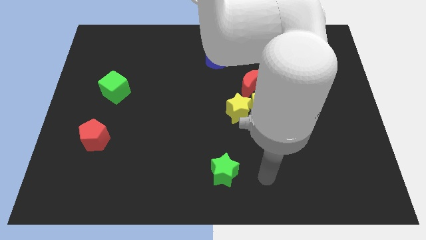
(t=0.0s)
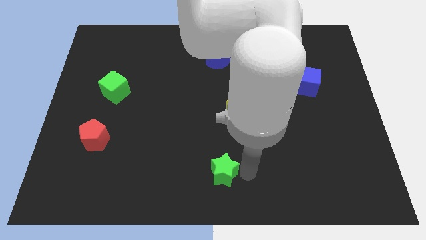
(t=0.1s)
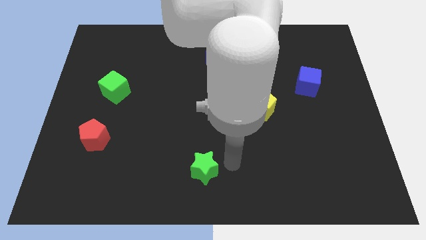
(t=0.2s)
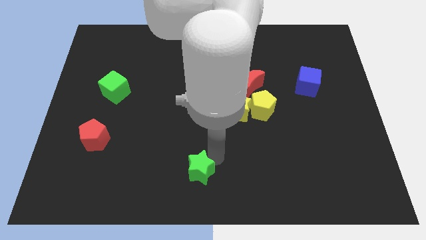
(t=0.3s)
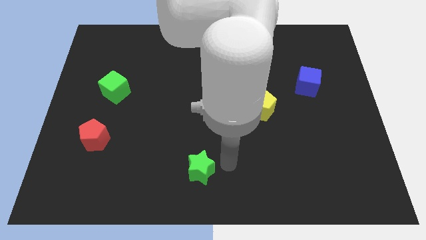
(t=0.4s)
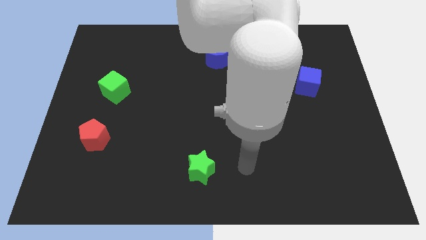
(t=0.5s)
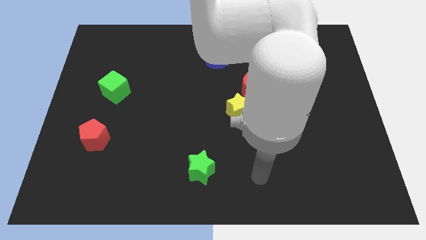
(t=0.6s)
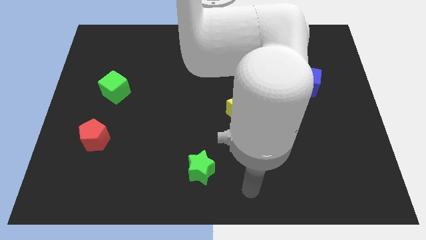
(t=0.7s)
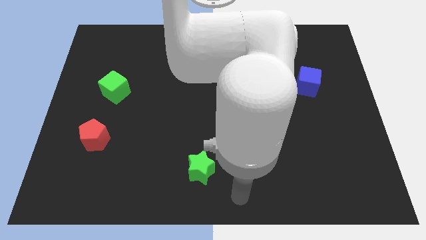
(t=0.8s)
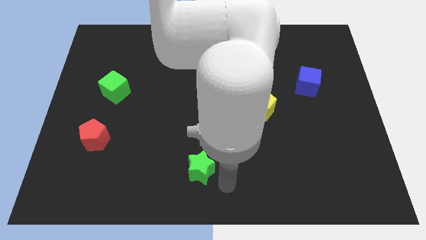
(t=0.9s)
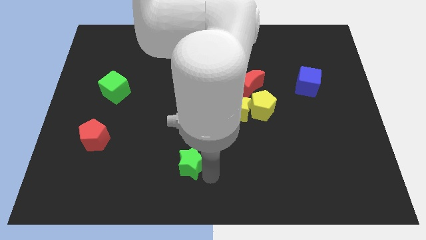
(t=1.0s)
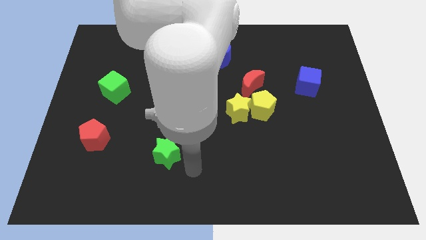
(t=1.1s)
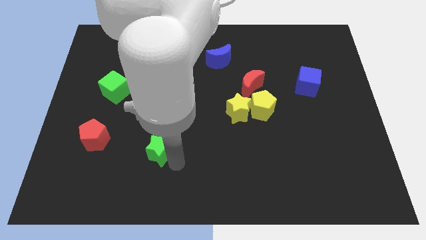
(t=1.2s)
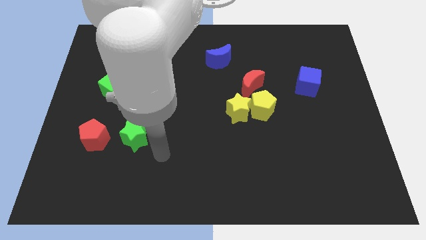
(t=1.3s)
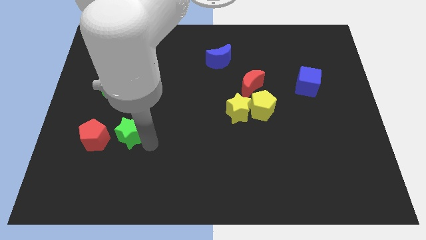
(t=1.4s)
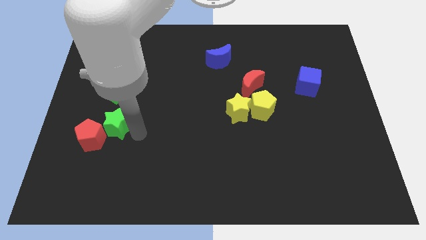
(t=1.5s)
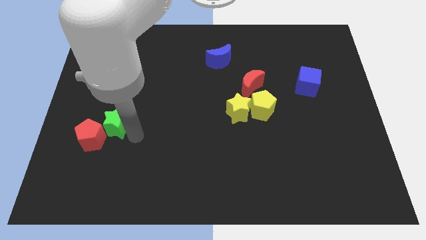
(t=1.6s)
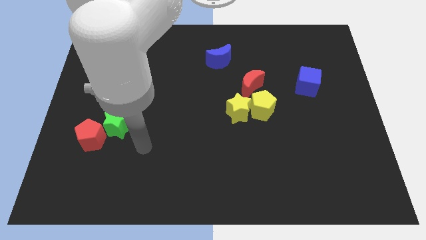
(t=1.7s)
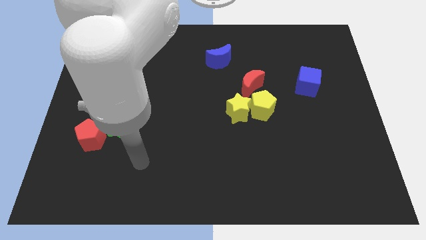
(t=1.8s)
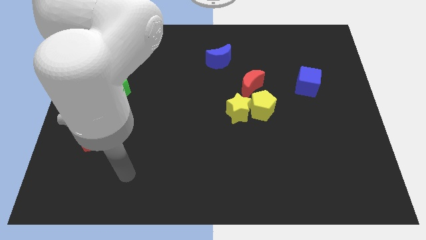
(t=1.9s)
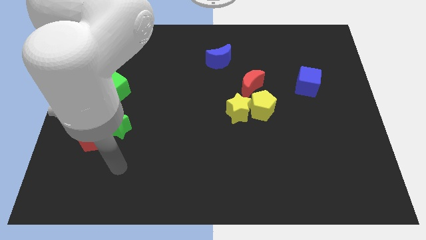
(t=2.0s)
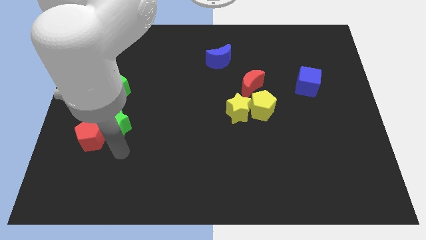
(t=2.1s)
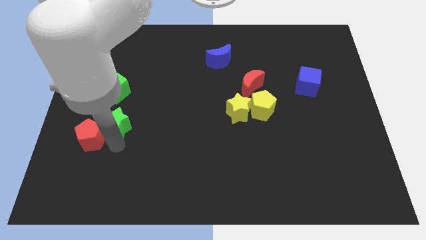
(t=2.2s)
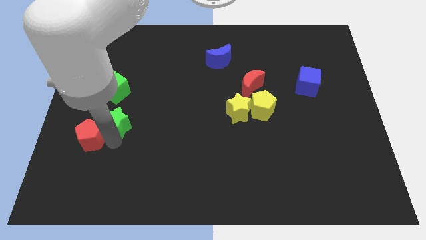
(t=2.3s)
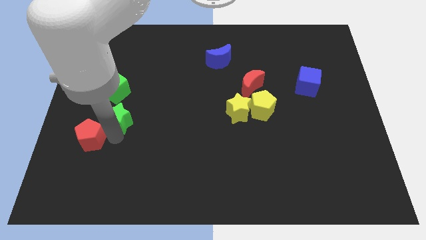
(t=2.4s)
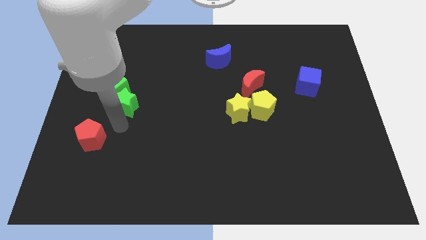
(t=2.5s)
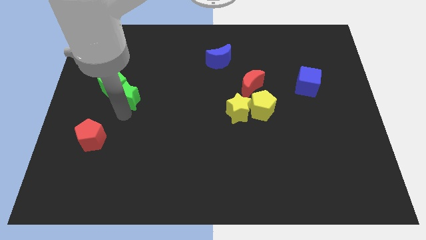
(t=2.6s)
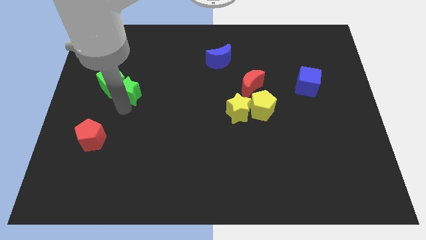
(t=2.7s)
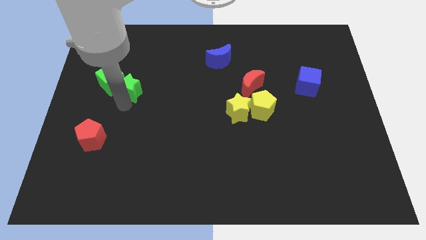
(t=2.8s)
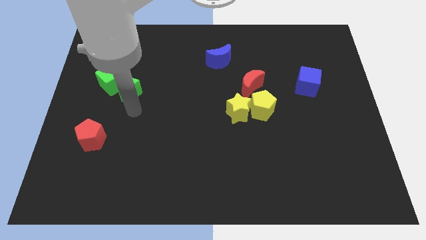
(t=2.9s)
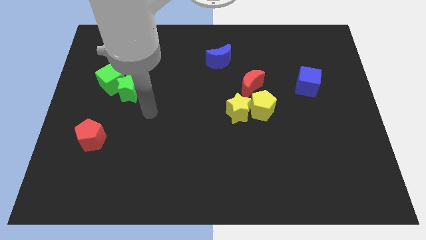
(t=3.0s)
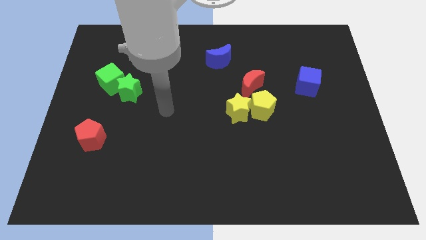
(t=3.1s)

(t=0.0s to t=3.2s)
push the green star into the green cube

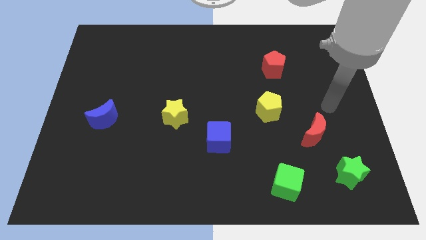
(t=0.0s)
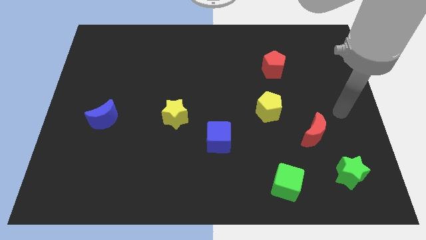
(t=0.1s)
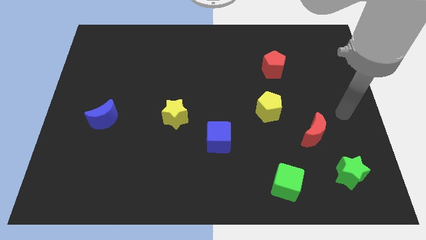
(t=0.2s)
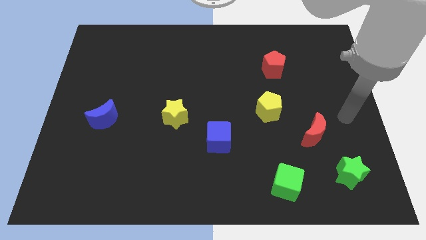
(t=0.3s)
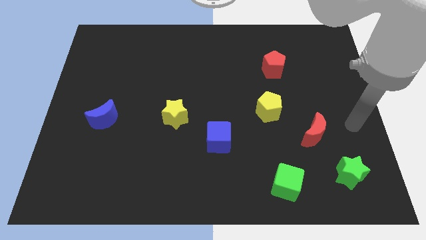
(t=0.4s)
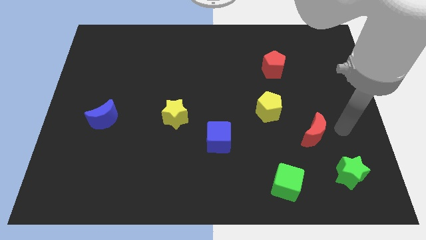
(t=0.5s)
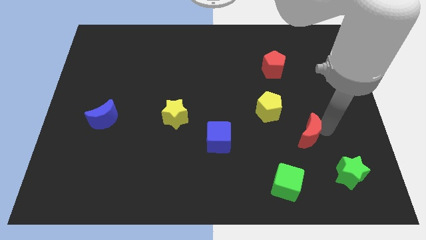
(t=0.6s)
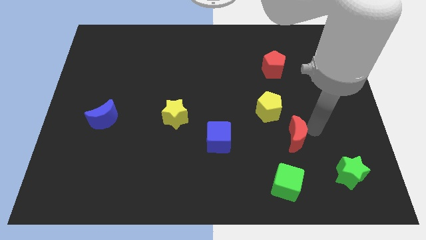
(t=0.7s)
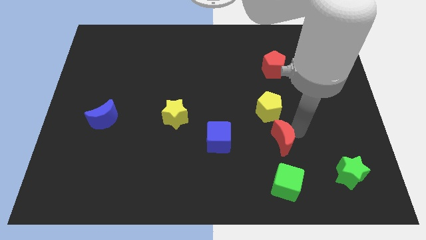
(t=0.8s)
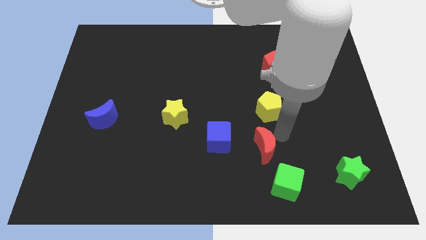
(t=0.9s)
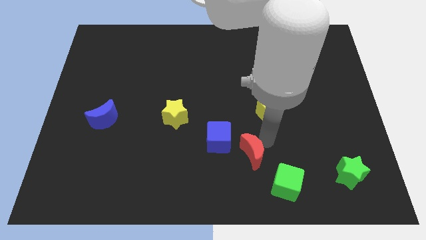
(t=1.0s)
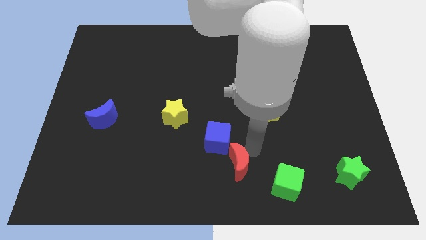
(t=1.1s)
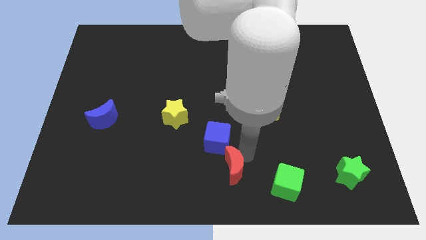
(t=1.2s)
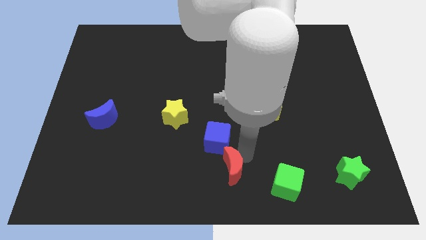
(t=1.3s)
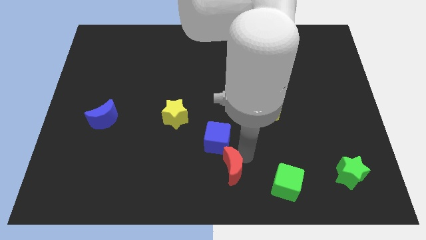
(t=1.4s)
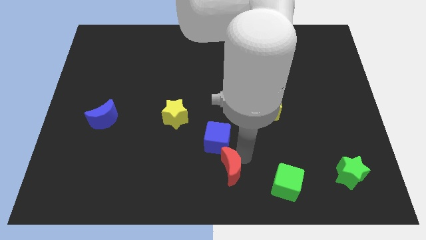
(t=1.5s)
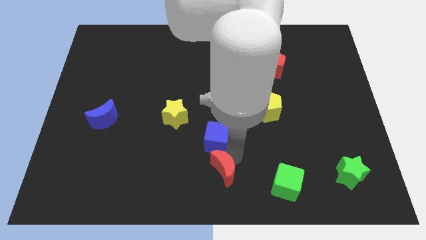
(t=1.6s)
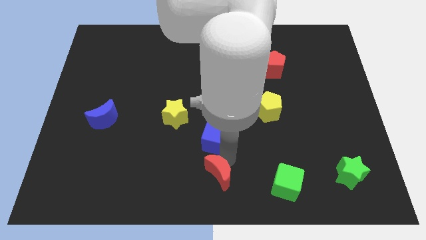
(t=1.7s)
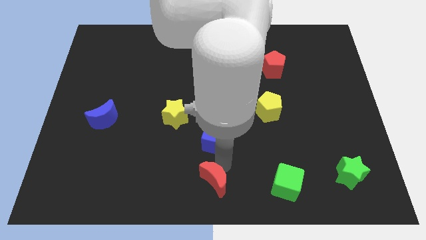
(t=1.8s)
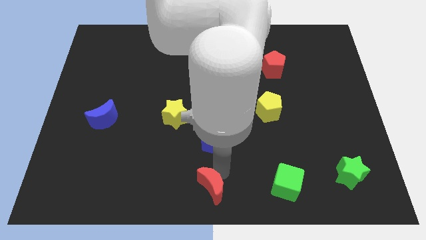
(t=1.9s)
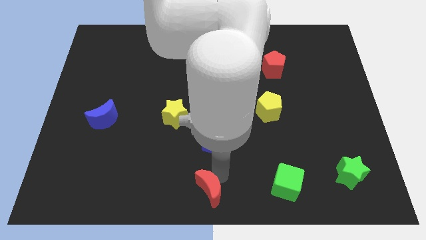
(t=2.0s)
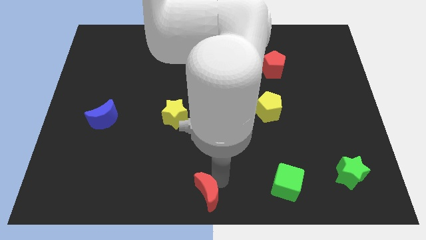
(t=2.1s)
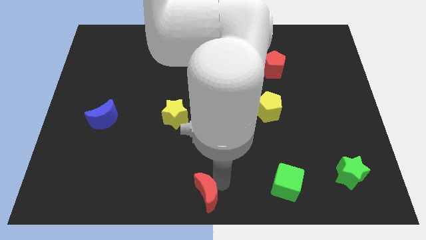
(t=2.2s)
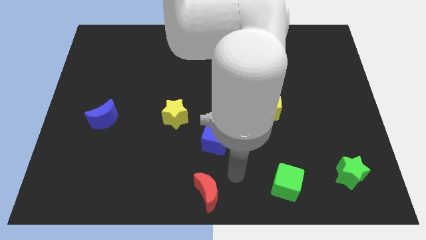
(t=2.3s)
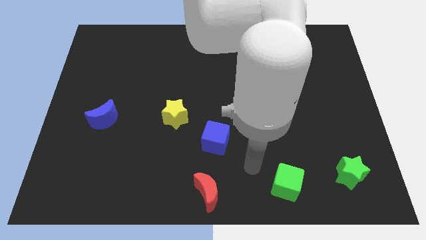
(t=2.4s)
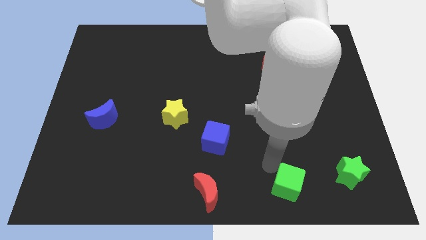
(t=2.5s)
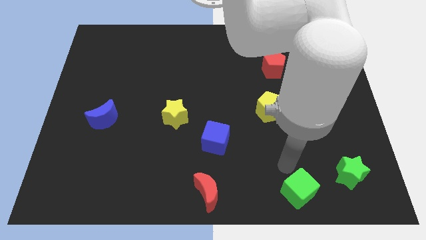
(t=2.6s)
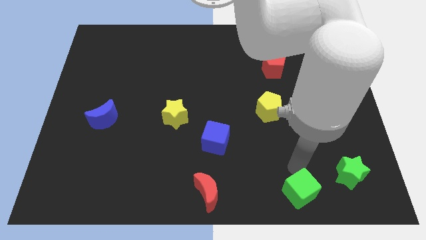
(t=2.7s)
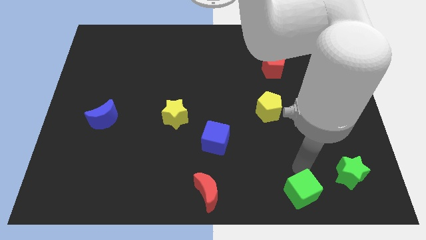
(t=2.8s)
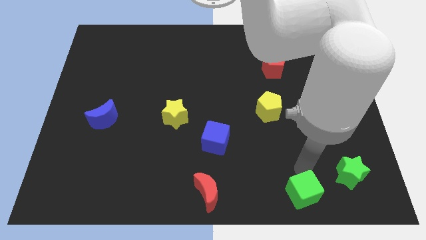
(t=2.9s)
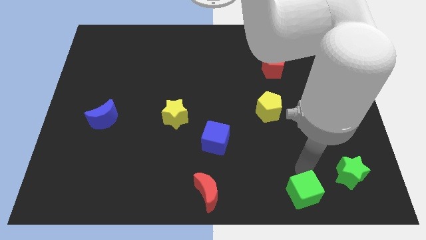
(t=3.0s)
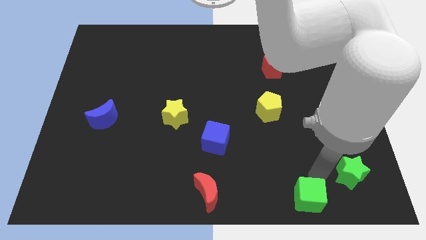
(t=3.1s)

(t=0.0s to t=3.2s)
move the red crescent to the bottom center of the board

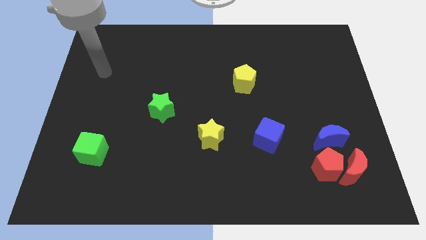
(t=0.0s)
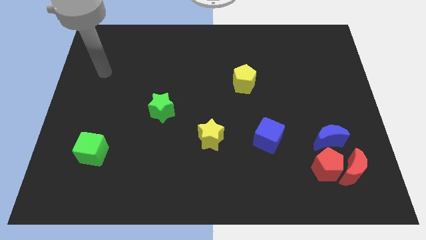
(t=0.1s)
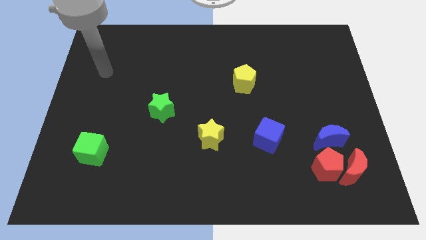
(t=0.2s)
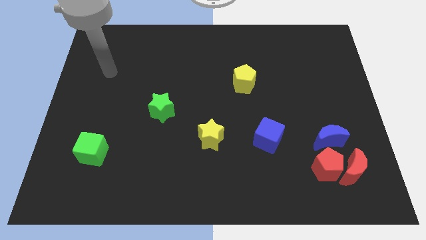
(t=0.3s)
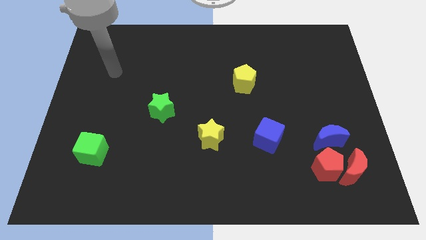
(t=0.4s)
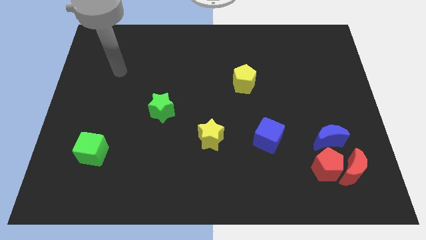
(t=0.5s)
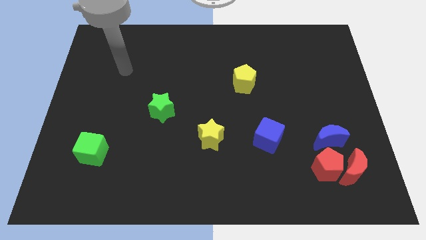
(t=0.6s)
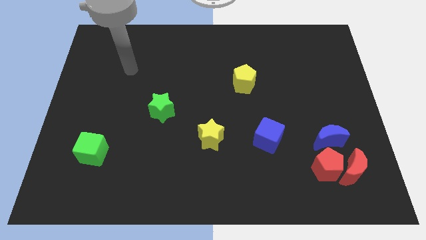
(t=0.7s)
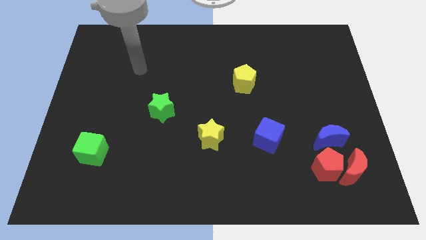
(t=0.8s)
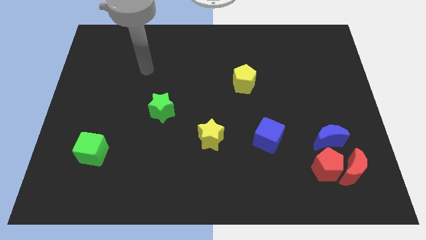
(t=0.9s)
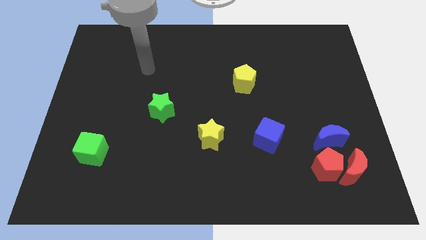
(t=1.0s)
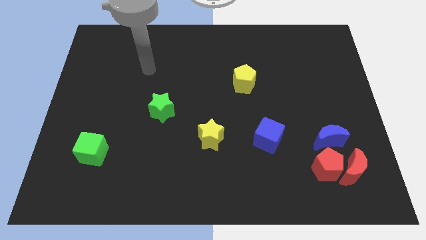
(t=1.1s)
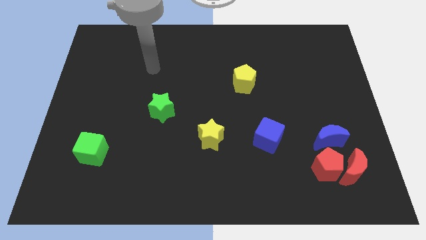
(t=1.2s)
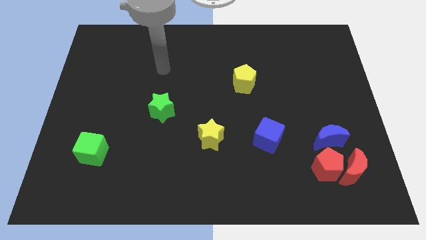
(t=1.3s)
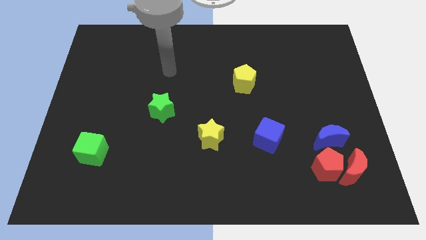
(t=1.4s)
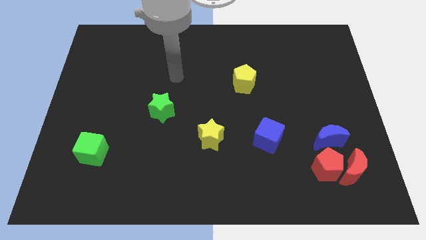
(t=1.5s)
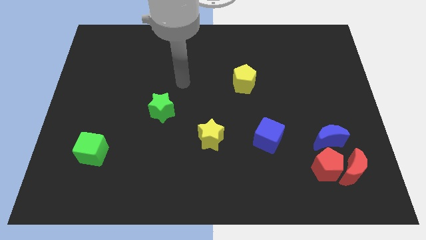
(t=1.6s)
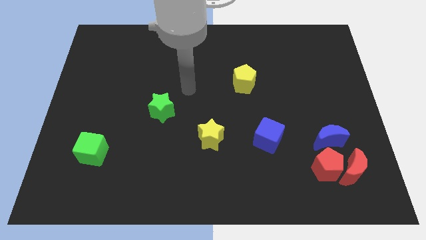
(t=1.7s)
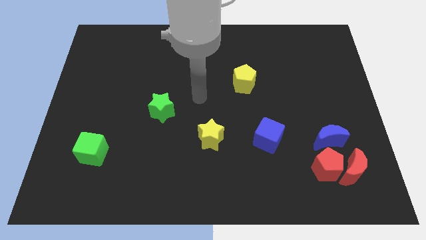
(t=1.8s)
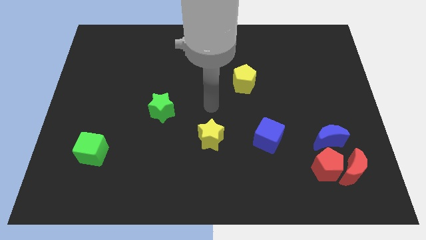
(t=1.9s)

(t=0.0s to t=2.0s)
point your arm in between the green star and yellow pentagon

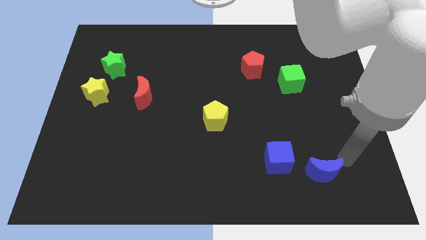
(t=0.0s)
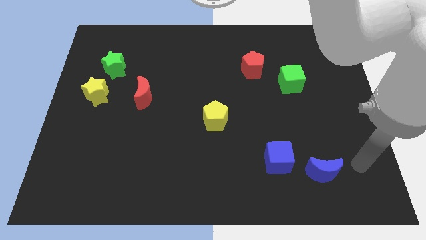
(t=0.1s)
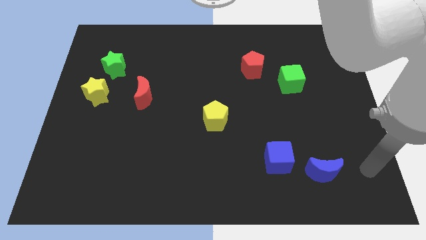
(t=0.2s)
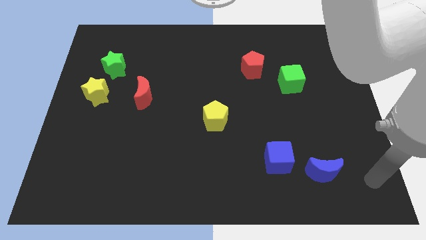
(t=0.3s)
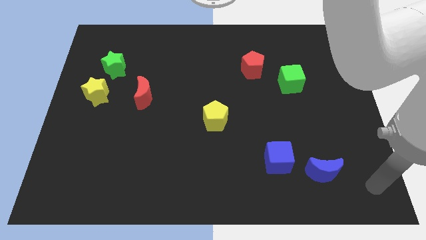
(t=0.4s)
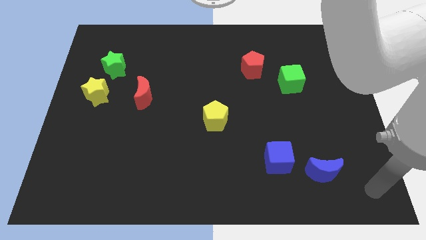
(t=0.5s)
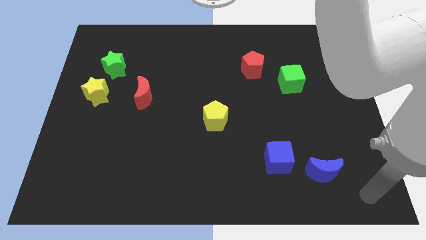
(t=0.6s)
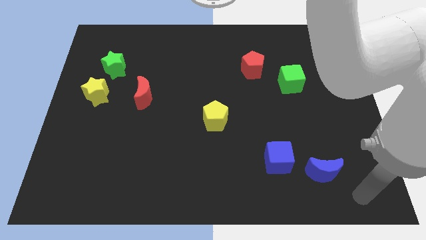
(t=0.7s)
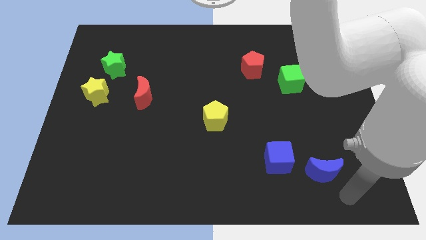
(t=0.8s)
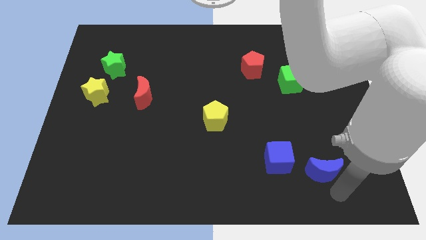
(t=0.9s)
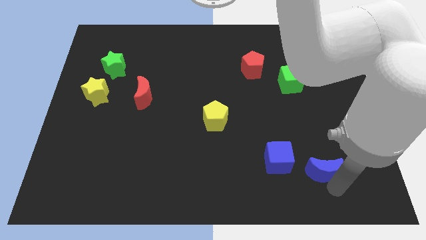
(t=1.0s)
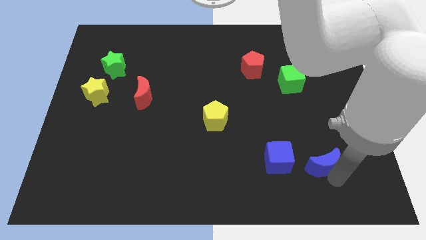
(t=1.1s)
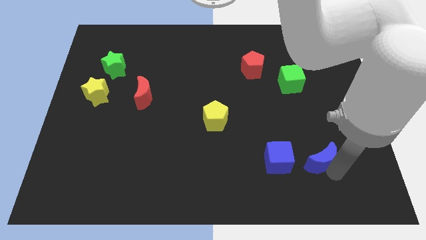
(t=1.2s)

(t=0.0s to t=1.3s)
touch bottom of blue moon
